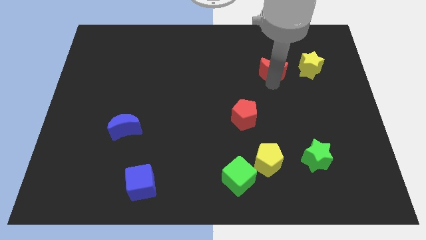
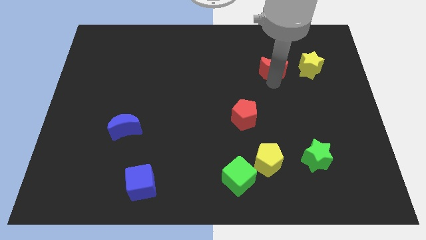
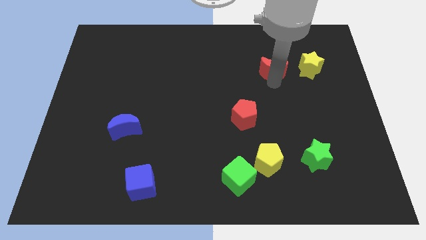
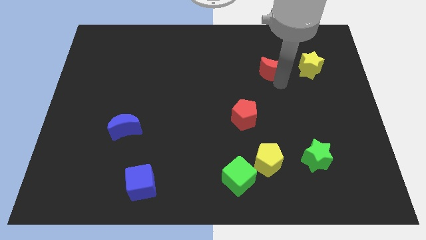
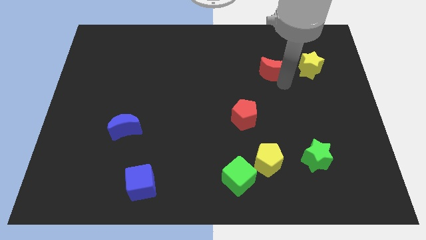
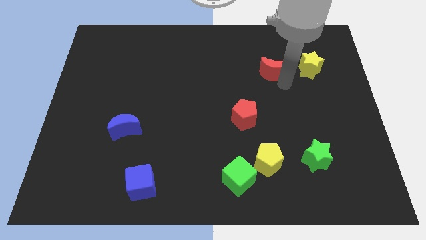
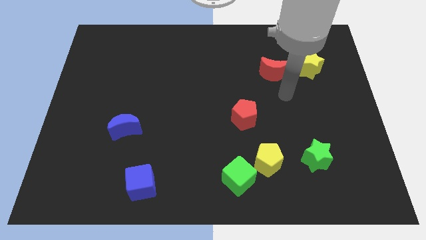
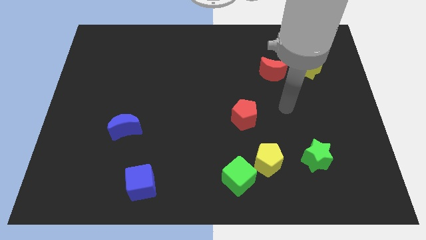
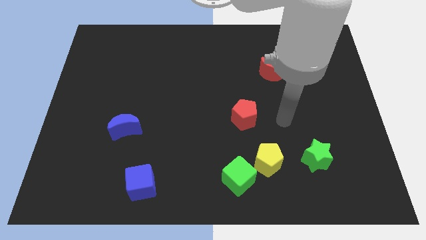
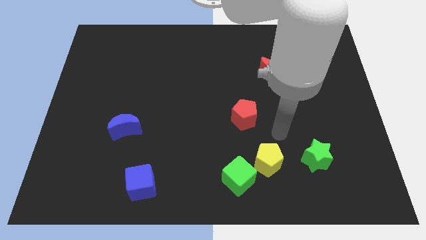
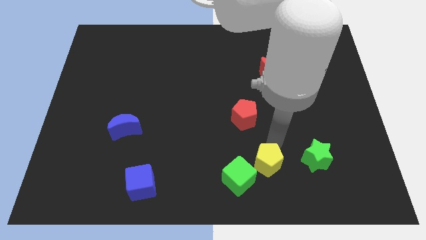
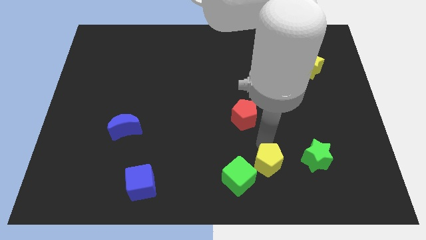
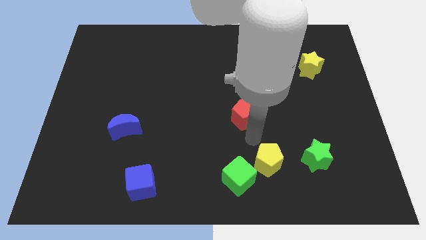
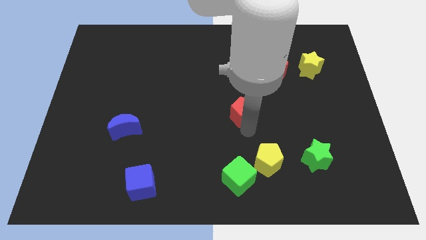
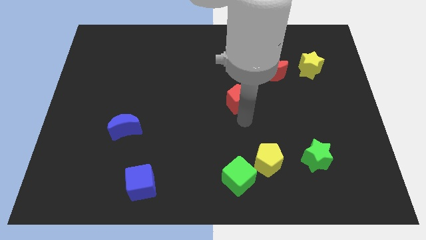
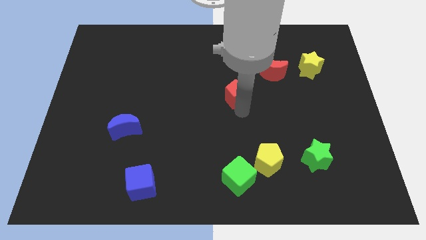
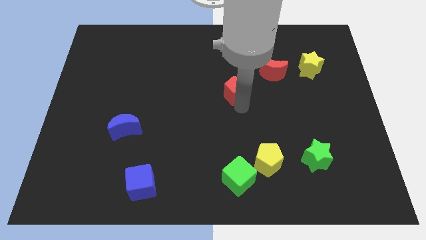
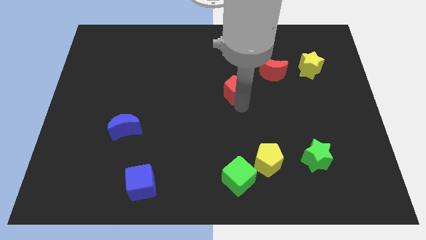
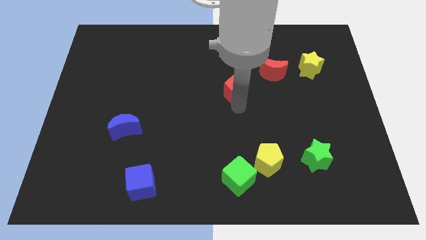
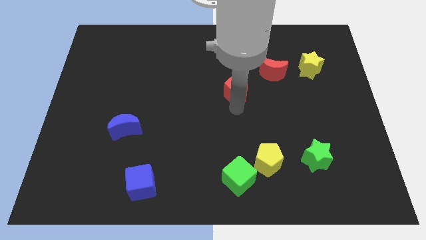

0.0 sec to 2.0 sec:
move the red pentagon slightly to the center top

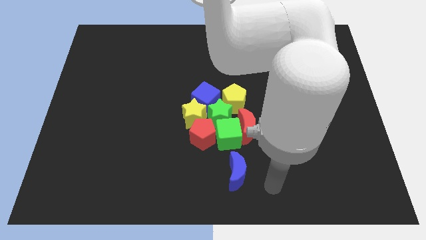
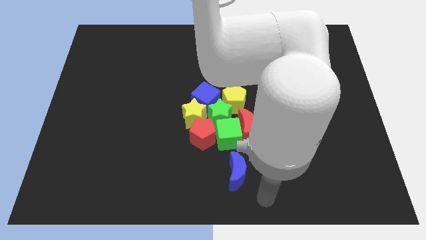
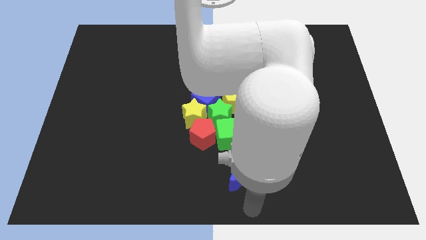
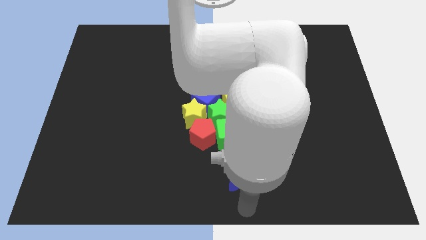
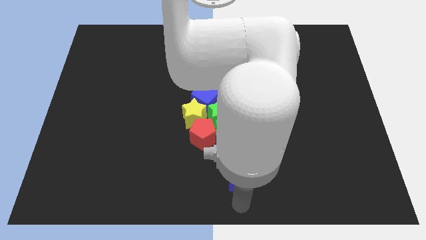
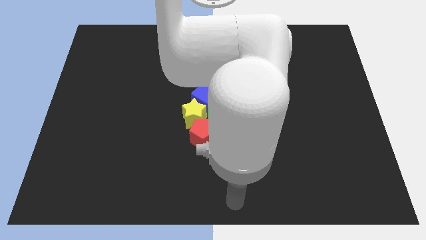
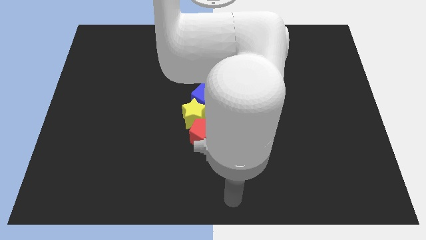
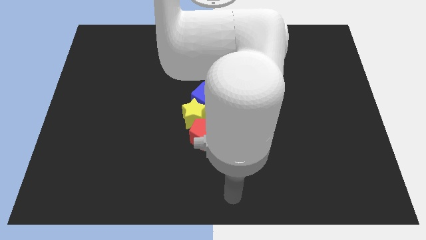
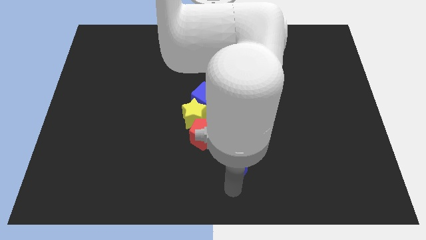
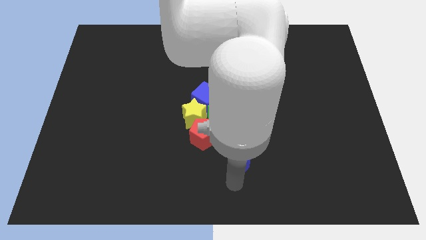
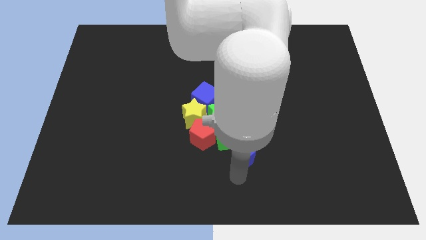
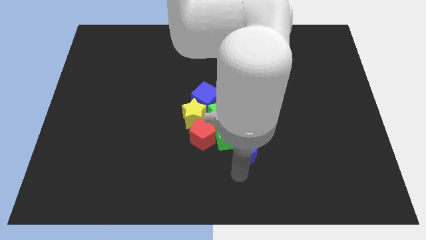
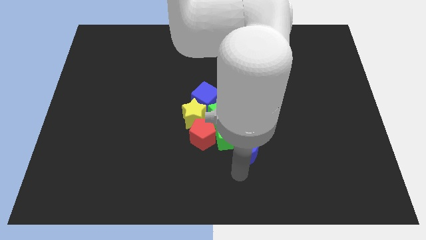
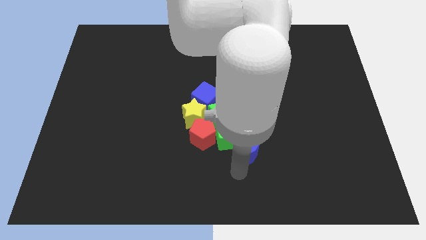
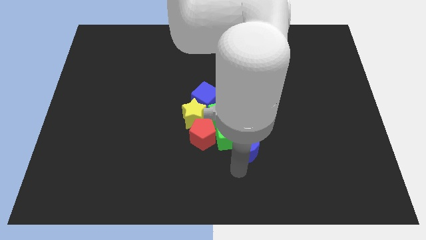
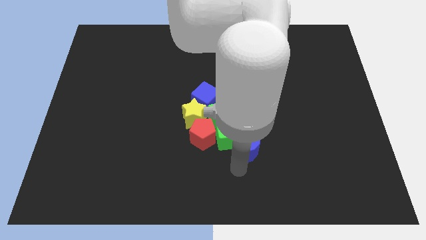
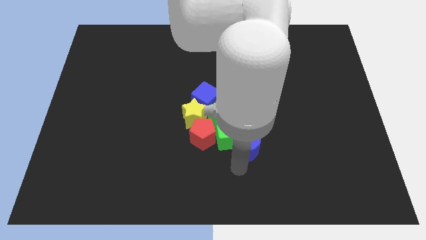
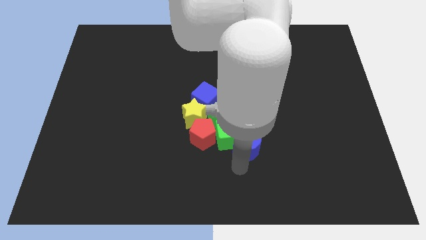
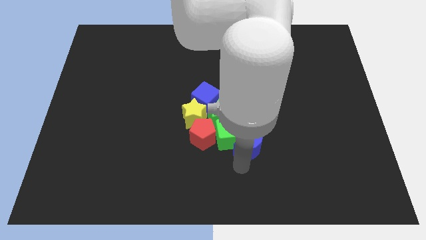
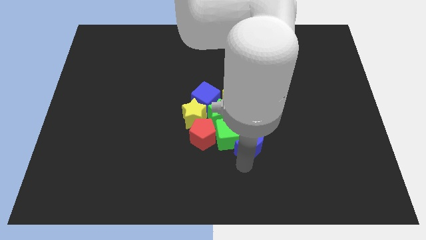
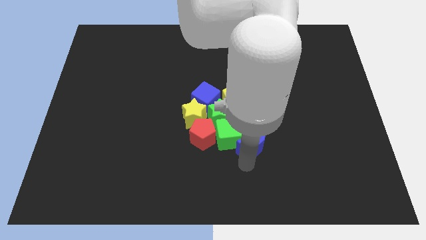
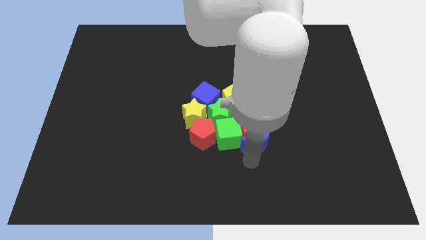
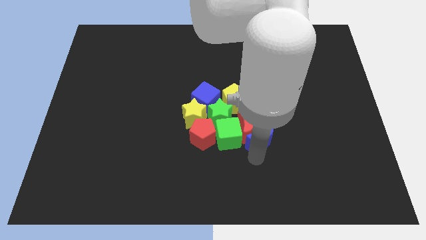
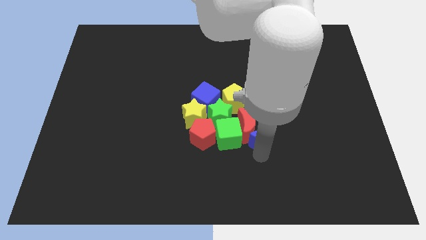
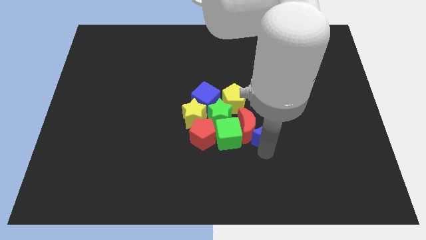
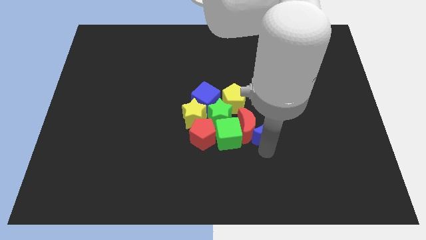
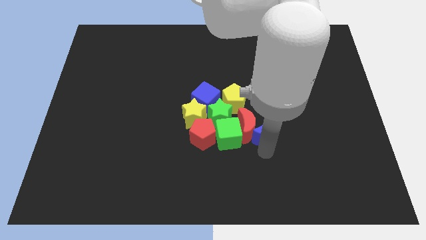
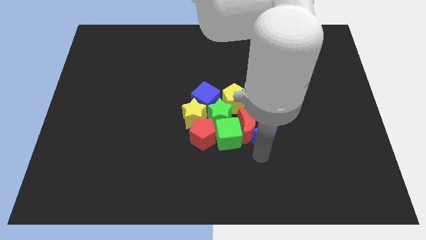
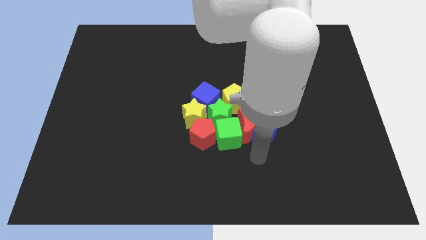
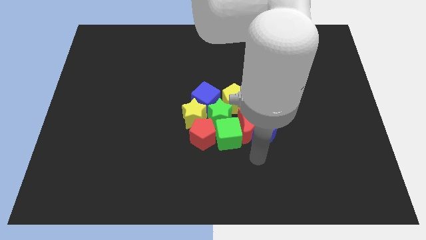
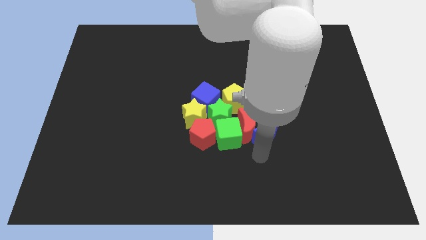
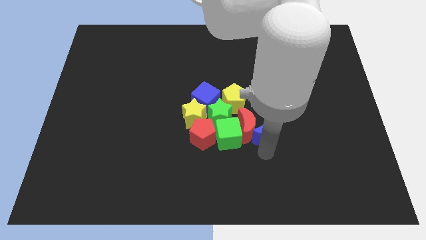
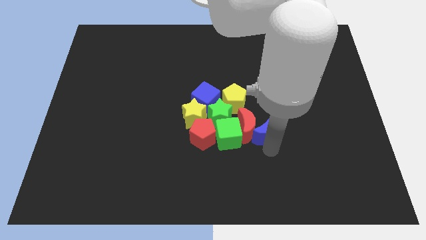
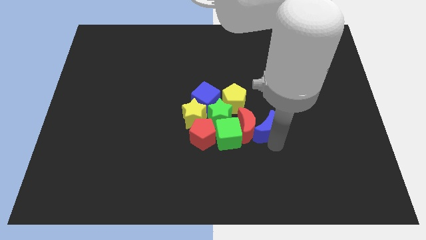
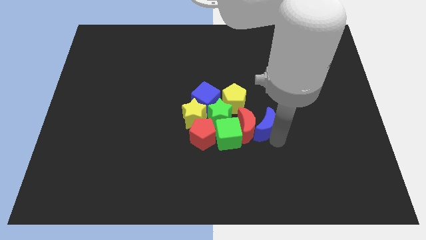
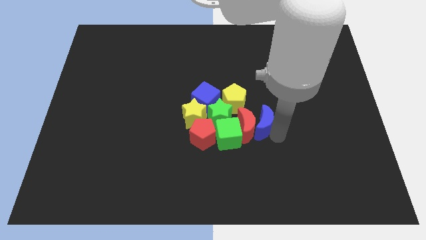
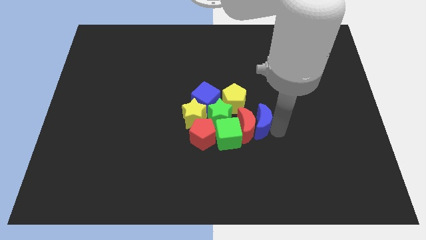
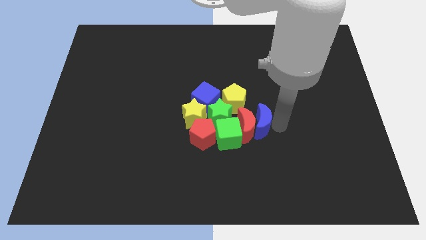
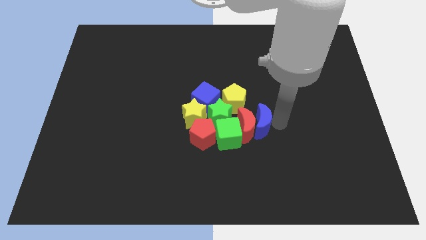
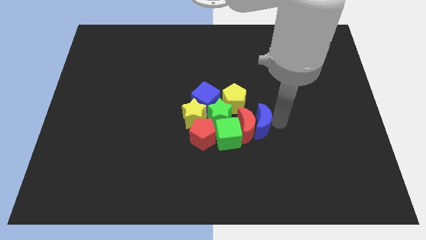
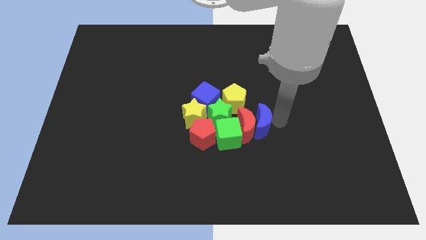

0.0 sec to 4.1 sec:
place the blue moon right to the red moon

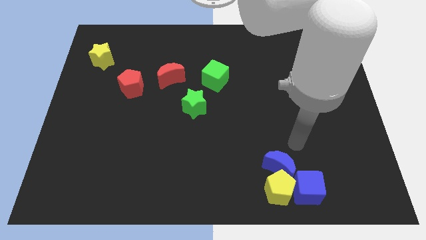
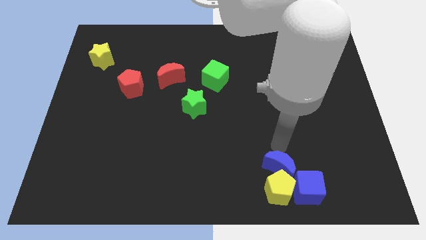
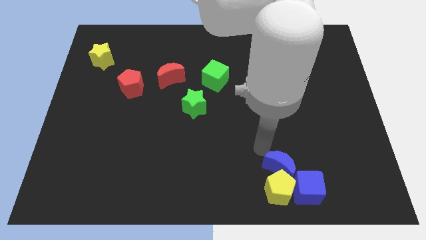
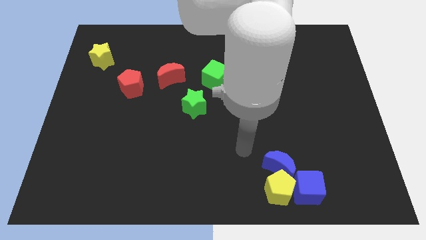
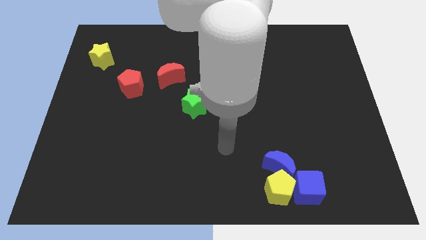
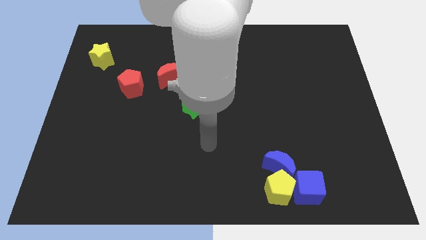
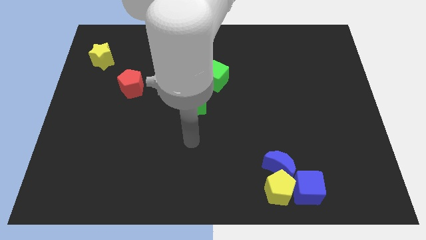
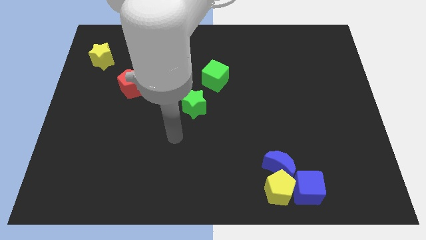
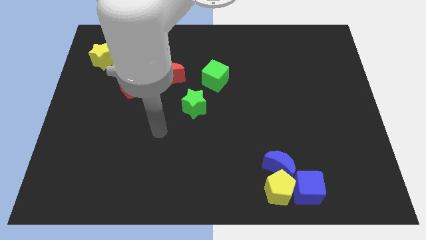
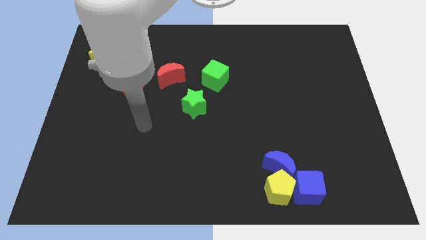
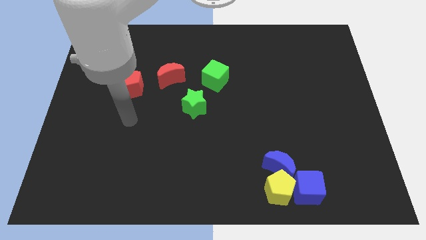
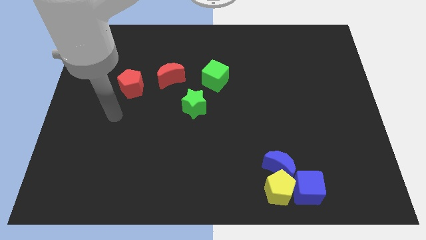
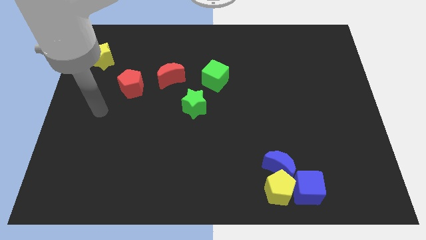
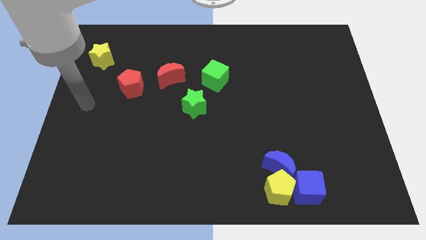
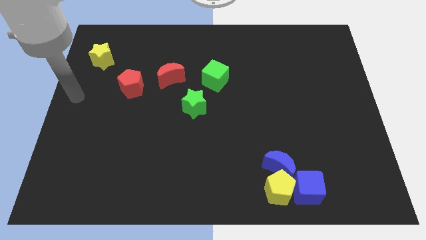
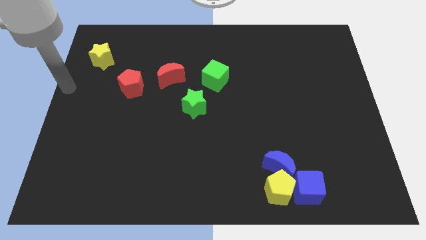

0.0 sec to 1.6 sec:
move your arm to the centre left of the board

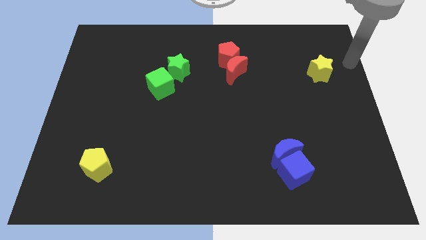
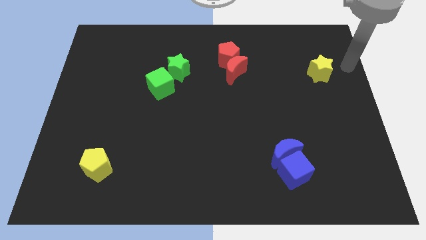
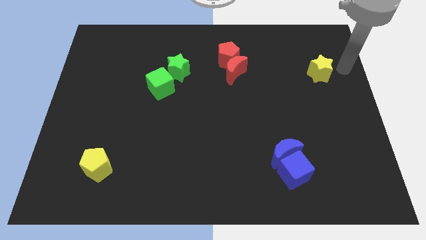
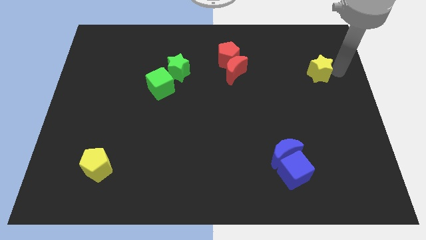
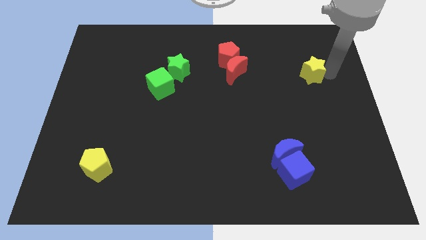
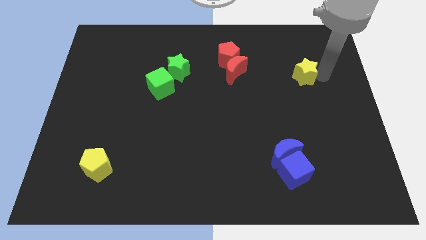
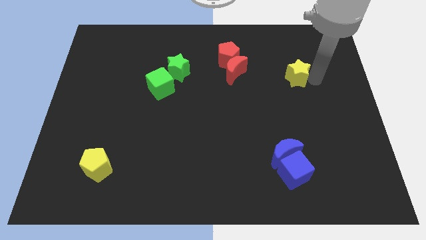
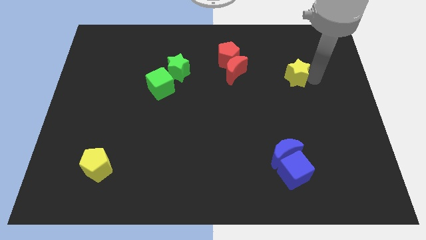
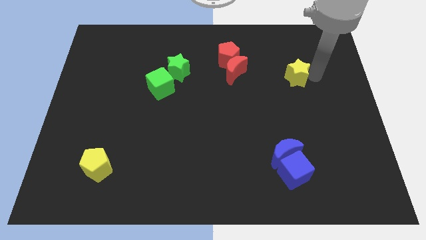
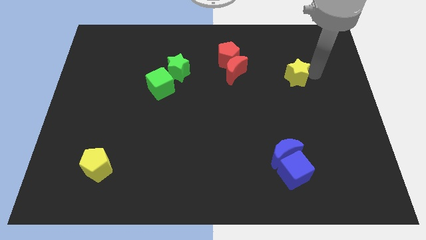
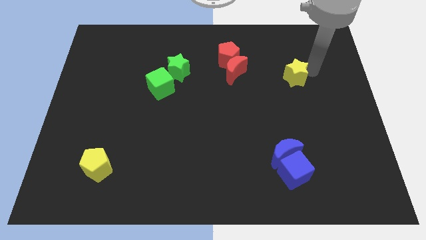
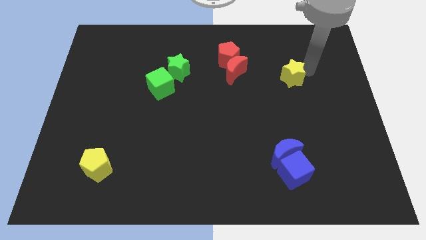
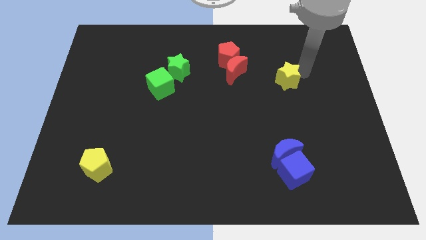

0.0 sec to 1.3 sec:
push the yellow star towards left
